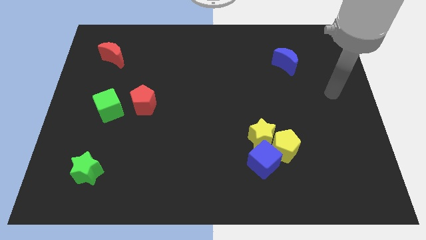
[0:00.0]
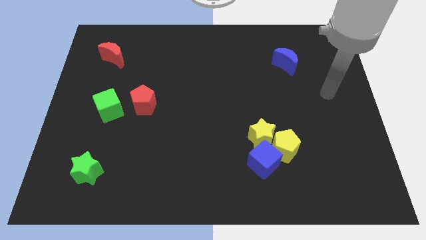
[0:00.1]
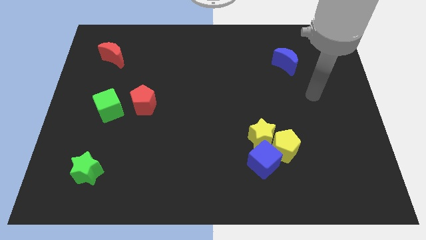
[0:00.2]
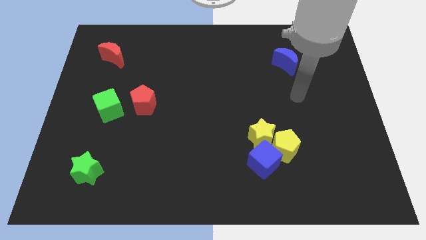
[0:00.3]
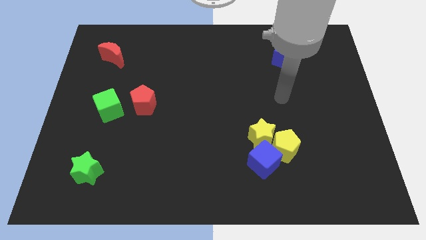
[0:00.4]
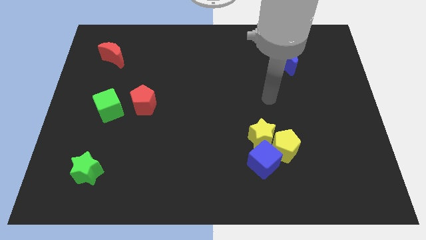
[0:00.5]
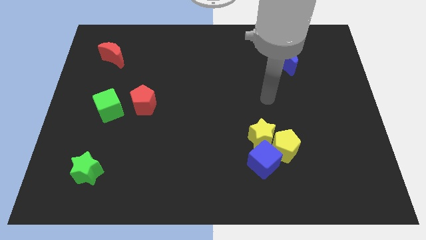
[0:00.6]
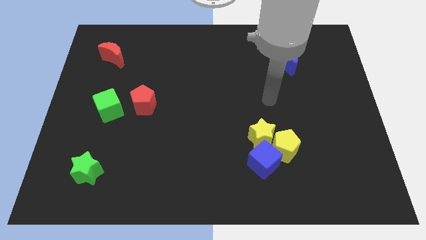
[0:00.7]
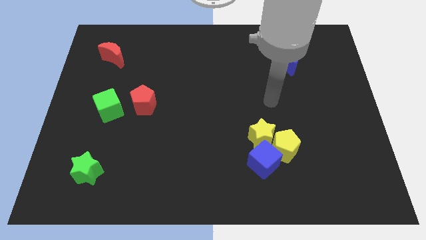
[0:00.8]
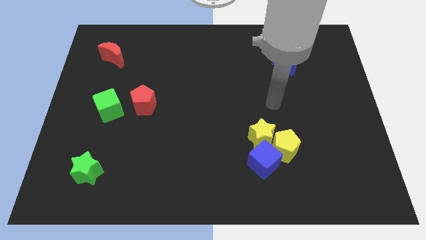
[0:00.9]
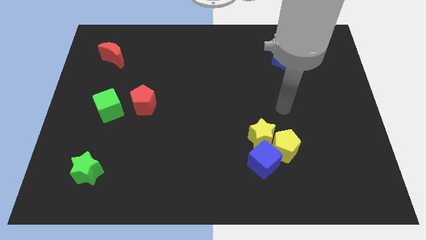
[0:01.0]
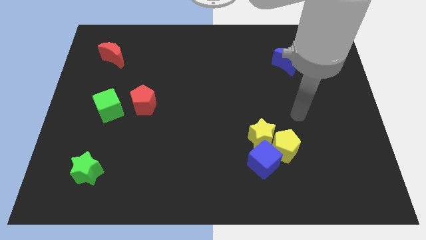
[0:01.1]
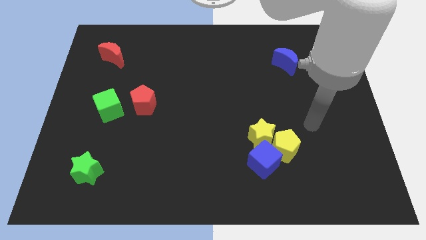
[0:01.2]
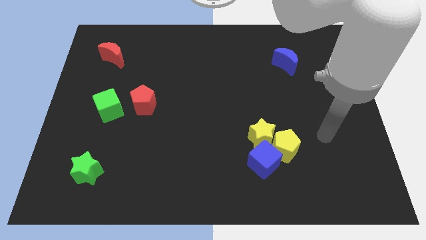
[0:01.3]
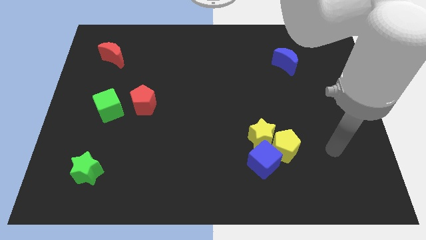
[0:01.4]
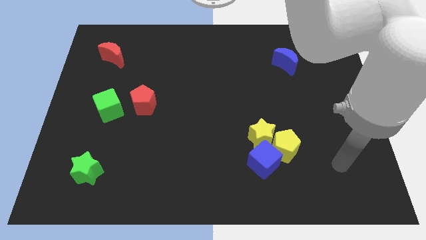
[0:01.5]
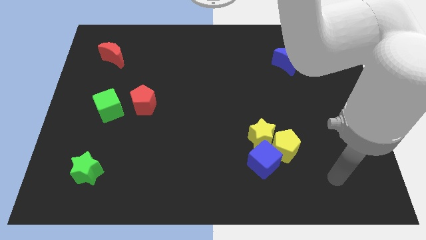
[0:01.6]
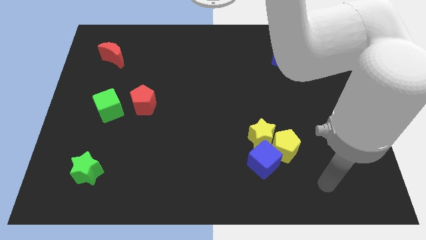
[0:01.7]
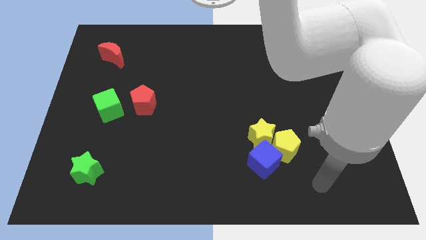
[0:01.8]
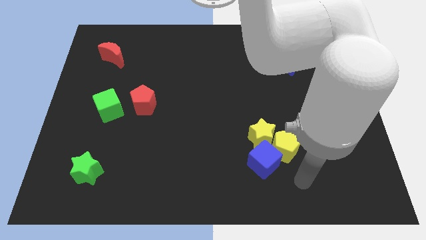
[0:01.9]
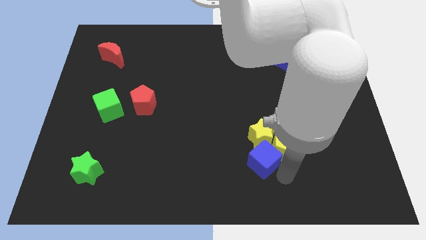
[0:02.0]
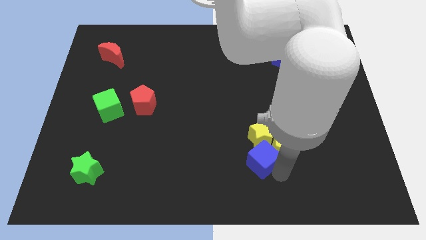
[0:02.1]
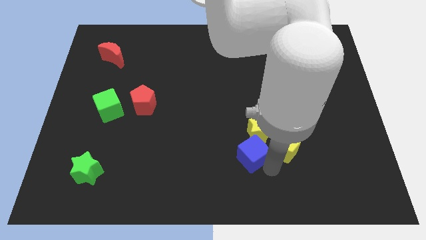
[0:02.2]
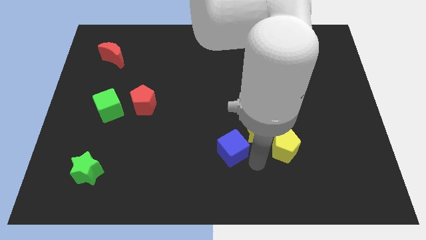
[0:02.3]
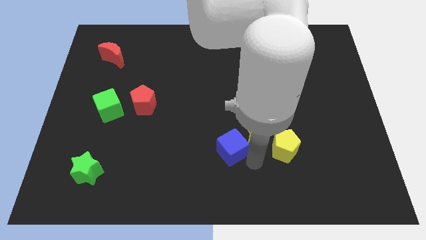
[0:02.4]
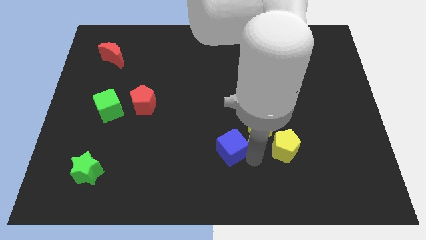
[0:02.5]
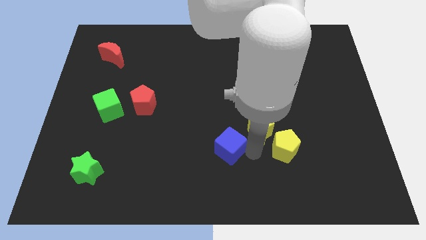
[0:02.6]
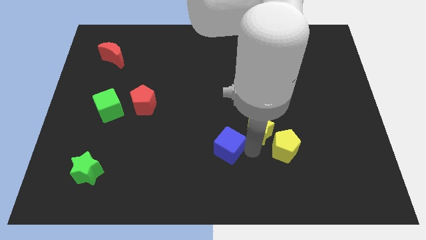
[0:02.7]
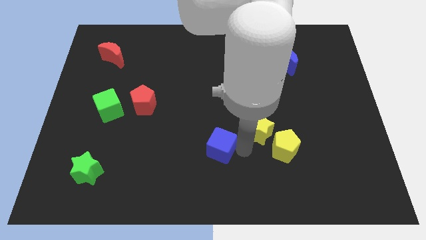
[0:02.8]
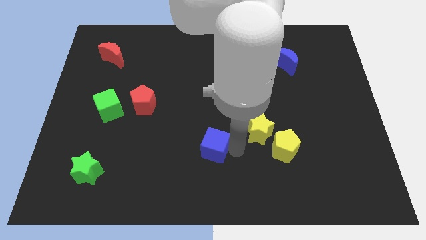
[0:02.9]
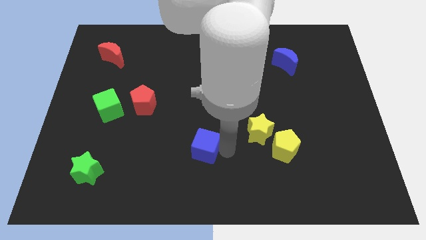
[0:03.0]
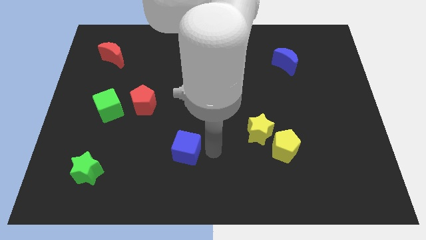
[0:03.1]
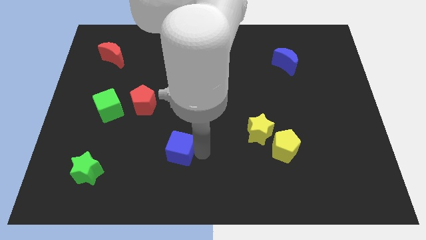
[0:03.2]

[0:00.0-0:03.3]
move the blue cube away from the yellow blocks

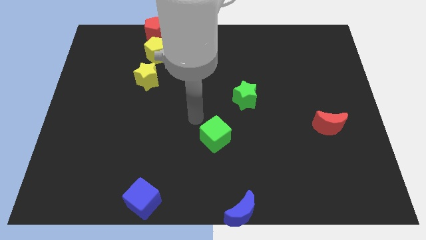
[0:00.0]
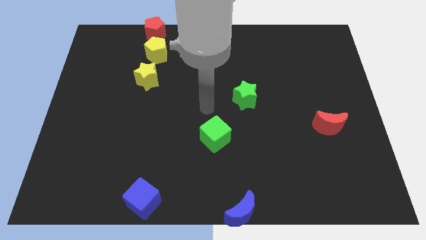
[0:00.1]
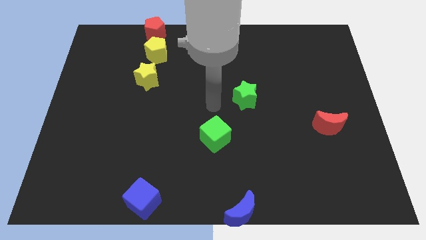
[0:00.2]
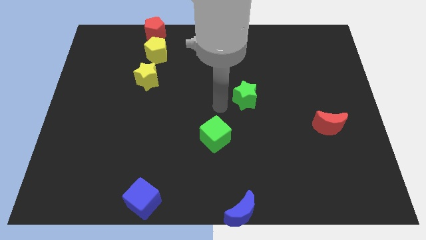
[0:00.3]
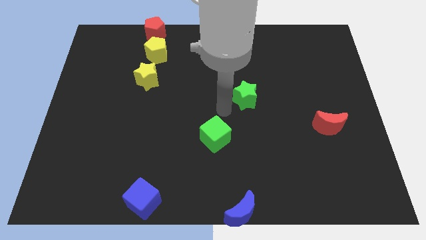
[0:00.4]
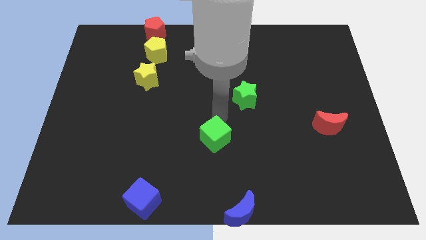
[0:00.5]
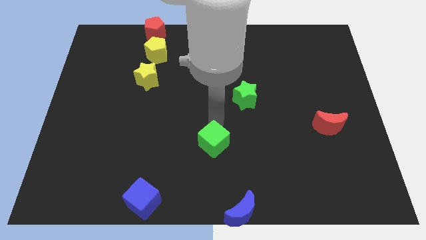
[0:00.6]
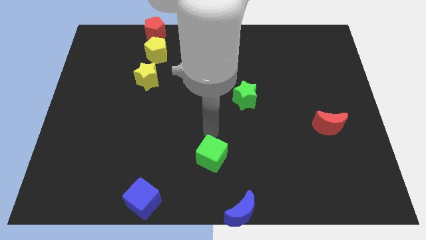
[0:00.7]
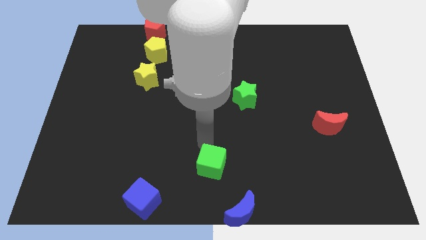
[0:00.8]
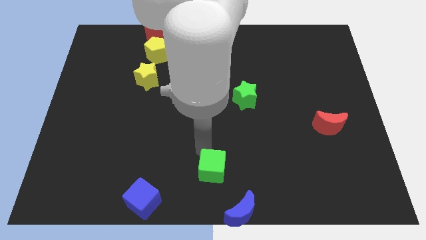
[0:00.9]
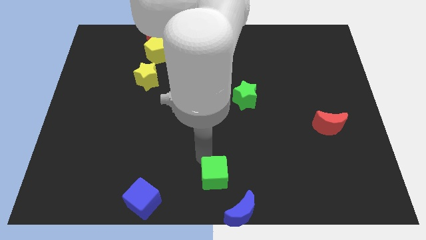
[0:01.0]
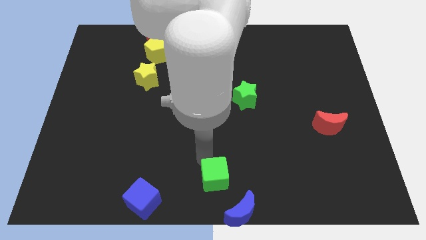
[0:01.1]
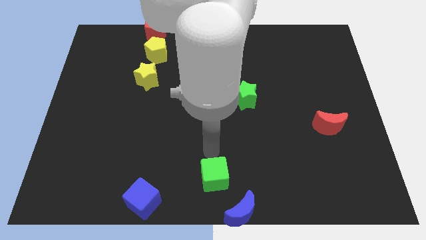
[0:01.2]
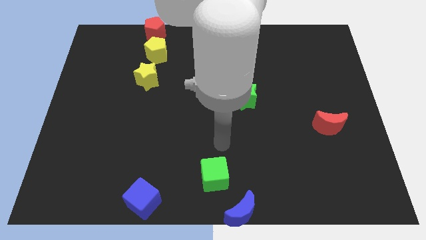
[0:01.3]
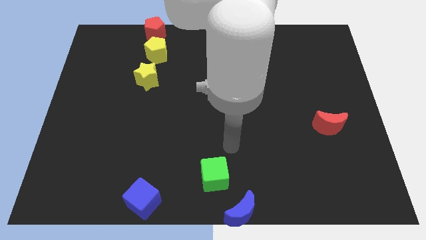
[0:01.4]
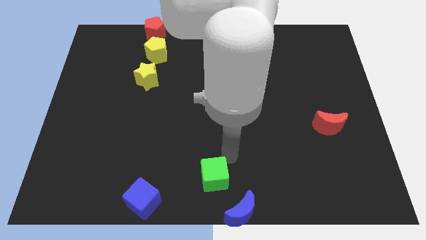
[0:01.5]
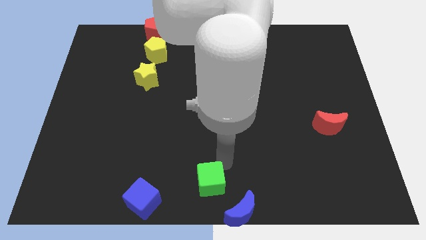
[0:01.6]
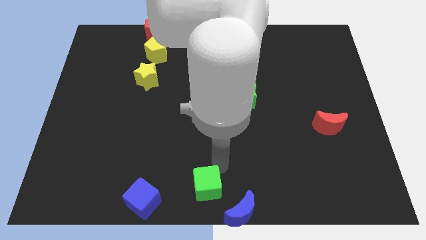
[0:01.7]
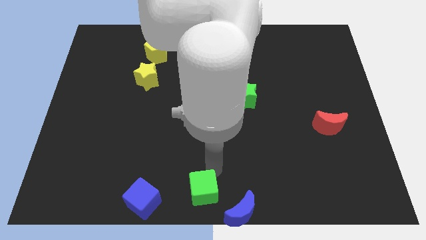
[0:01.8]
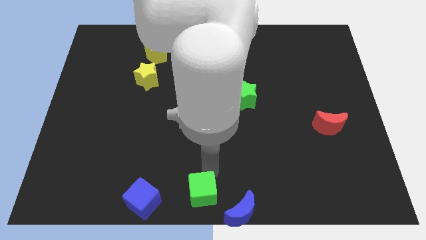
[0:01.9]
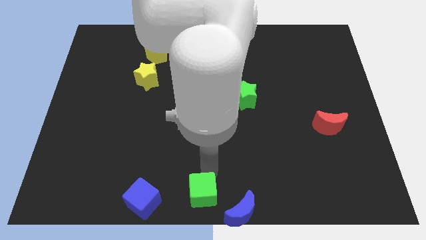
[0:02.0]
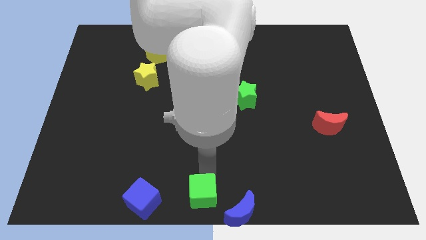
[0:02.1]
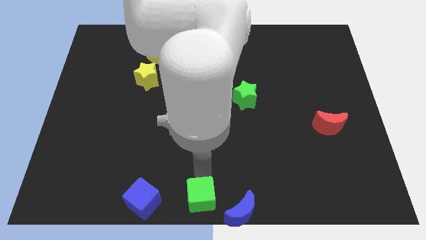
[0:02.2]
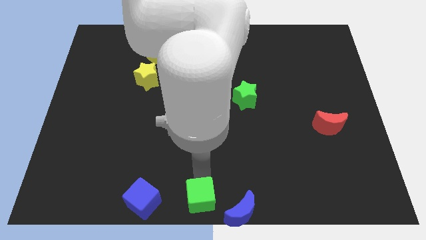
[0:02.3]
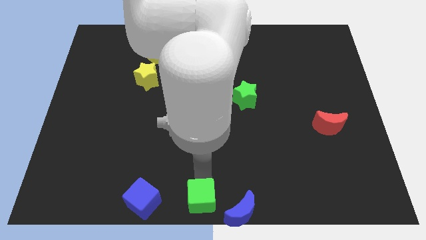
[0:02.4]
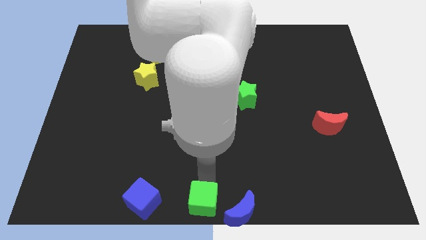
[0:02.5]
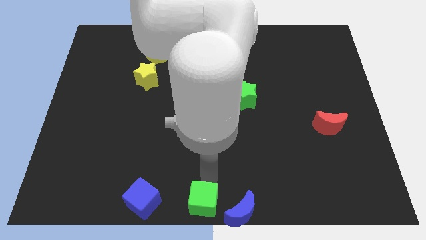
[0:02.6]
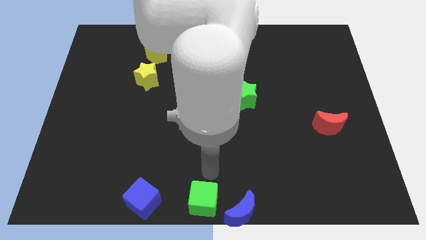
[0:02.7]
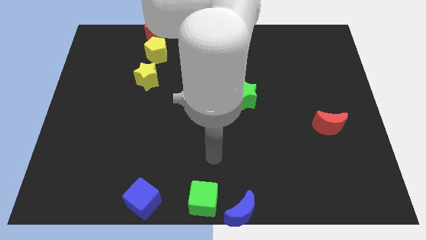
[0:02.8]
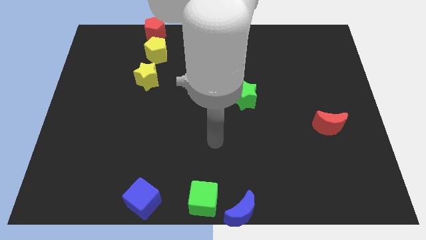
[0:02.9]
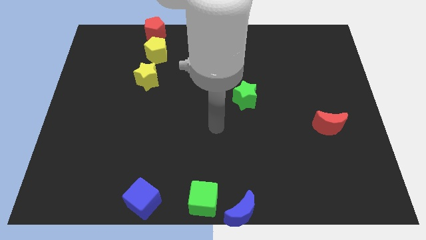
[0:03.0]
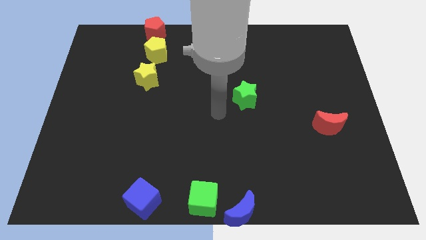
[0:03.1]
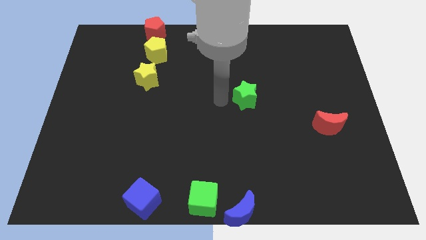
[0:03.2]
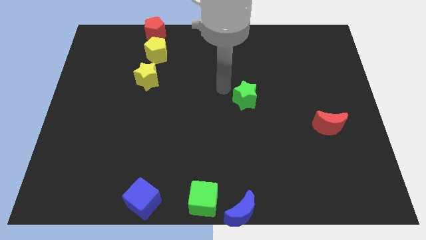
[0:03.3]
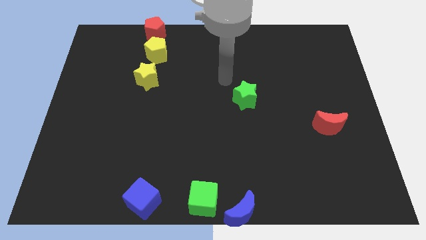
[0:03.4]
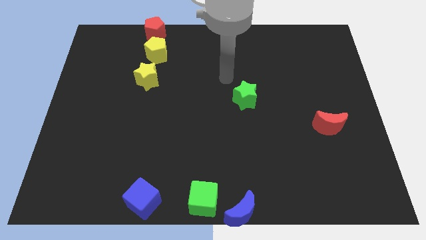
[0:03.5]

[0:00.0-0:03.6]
move the green cube between blue blocks

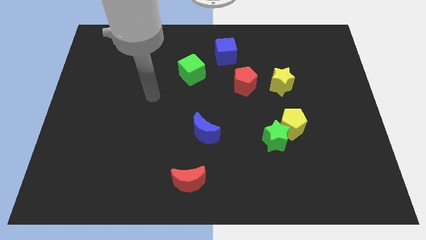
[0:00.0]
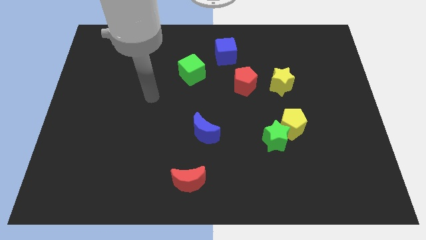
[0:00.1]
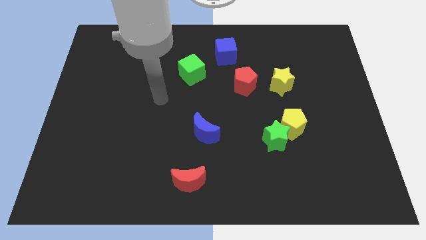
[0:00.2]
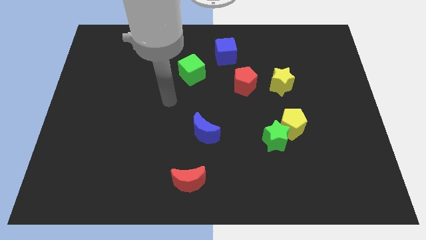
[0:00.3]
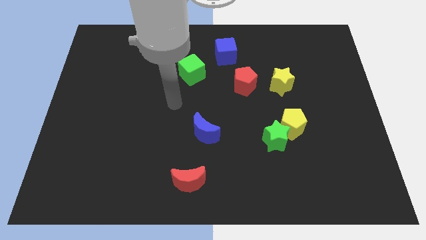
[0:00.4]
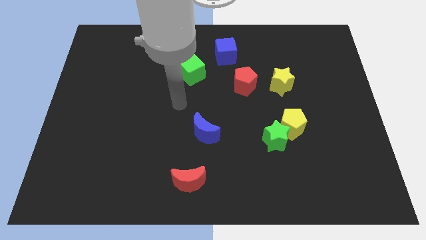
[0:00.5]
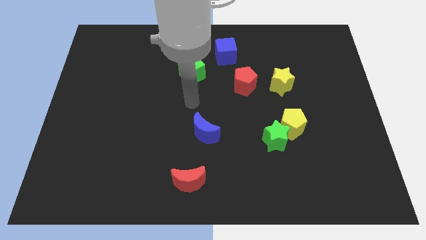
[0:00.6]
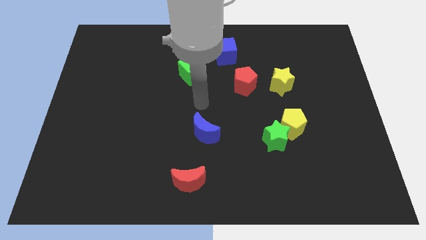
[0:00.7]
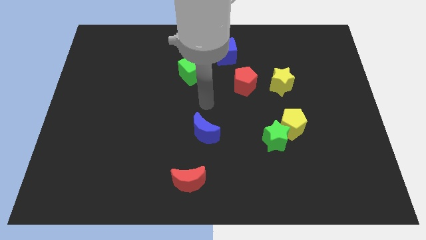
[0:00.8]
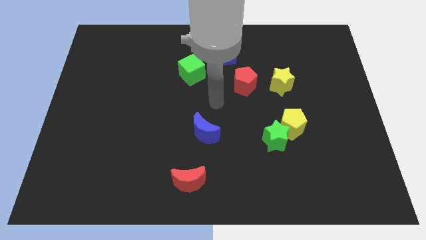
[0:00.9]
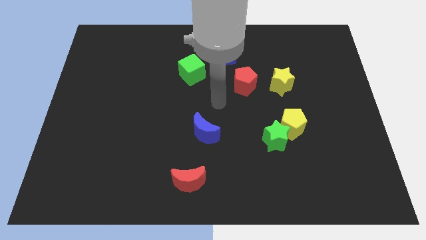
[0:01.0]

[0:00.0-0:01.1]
slide your arm to the center

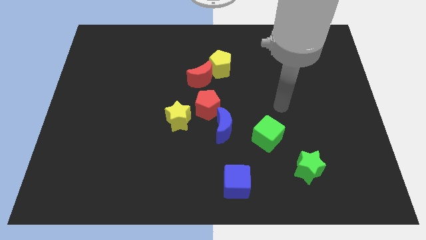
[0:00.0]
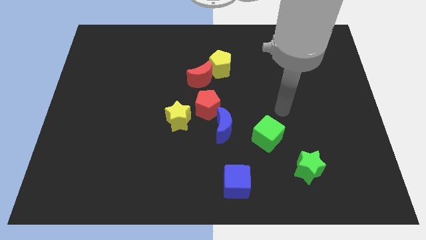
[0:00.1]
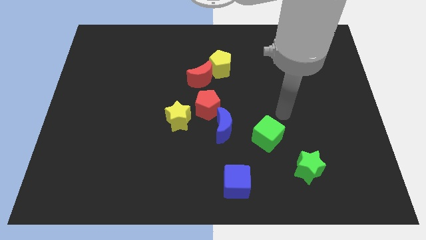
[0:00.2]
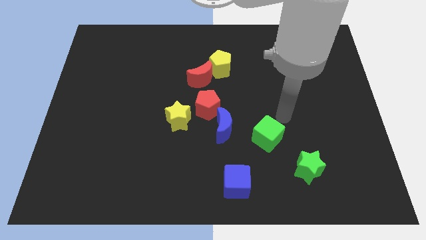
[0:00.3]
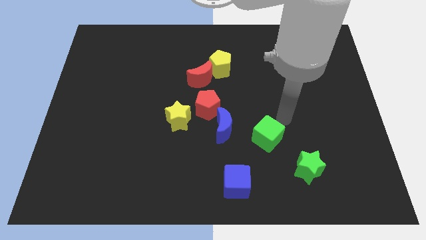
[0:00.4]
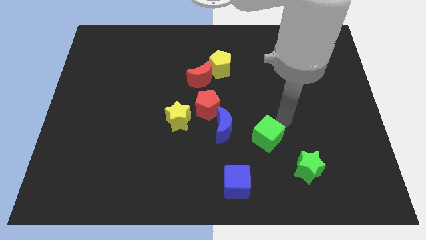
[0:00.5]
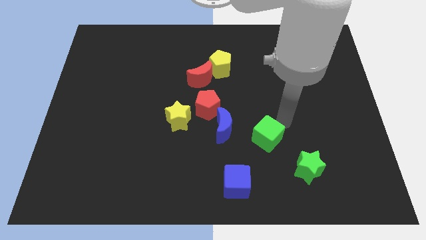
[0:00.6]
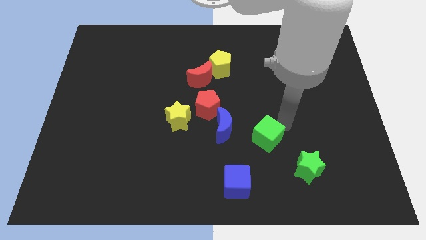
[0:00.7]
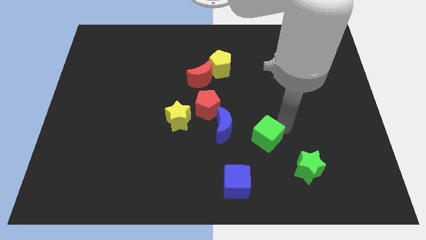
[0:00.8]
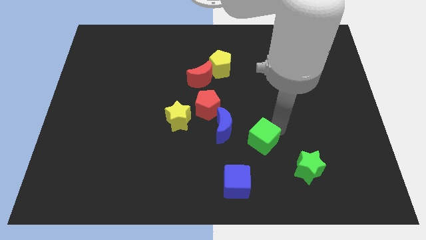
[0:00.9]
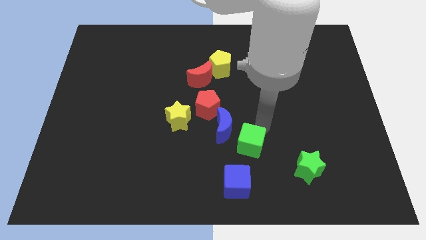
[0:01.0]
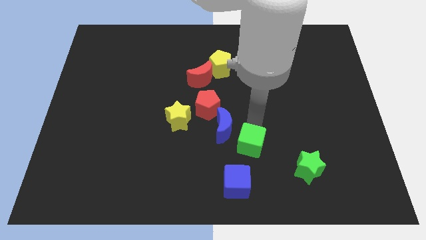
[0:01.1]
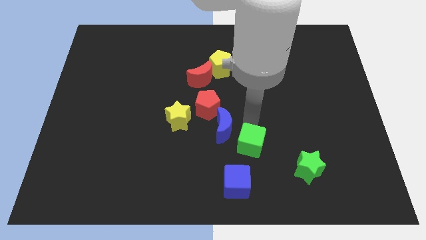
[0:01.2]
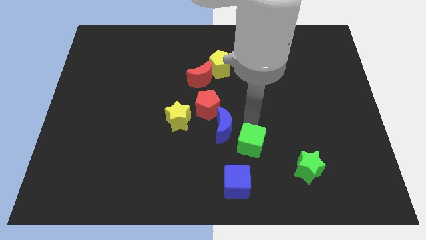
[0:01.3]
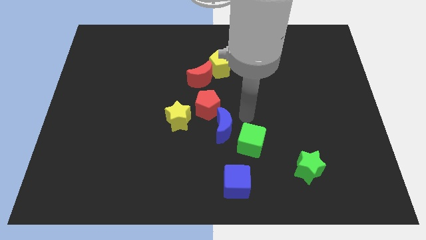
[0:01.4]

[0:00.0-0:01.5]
push the green cube towards the top side of the blue cube
